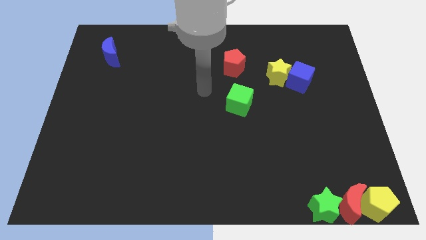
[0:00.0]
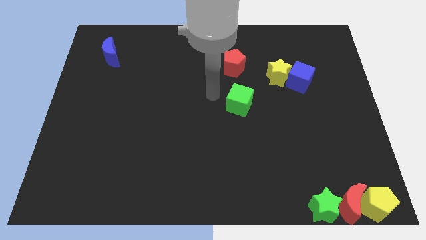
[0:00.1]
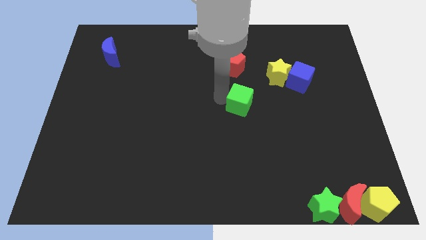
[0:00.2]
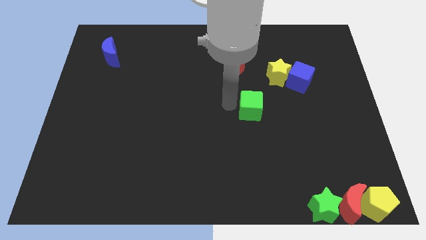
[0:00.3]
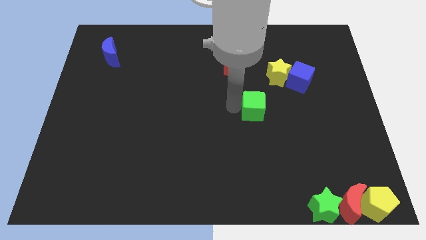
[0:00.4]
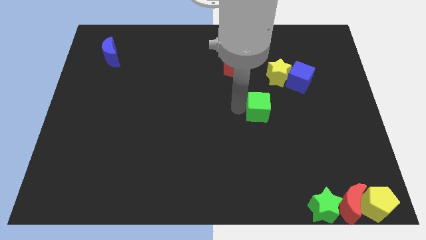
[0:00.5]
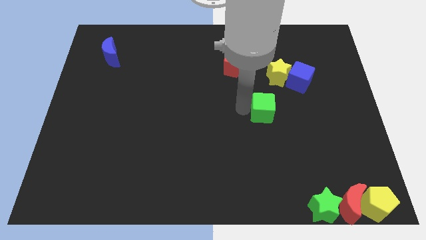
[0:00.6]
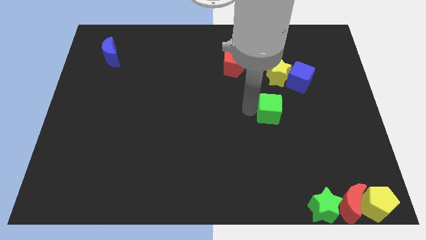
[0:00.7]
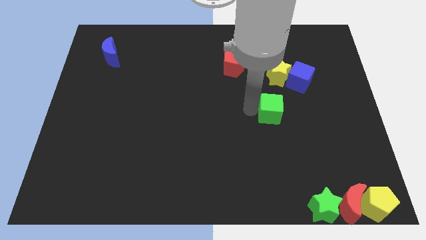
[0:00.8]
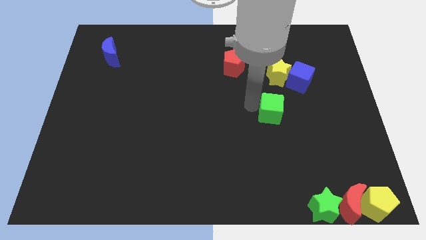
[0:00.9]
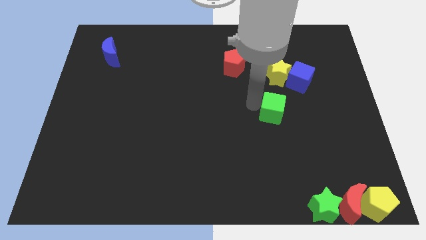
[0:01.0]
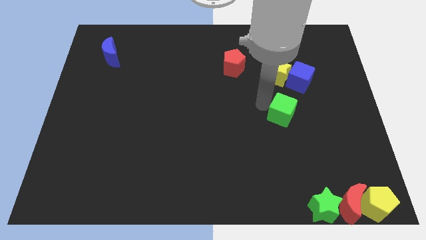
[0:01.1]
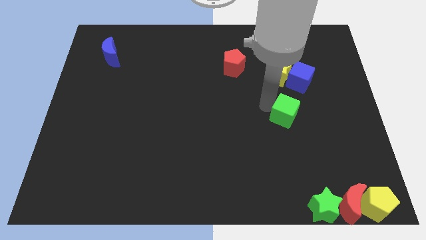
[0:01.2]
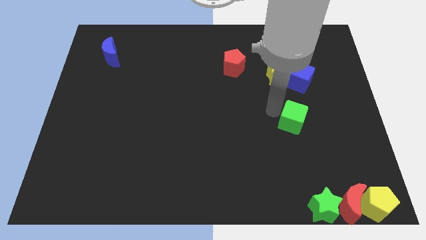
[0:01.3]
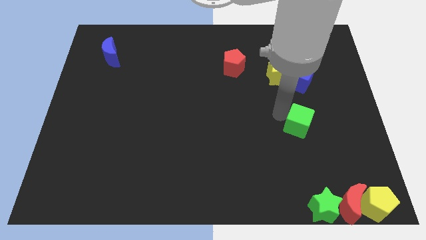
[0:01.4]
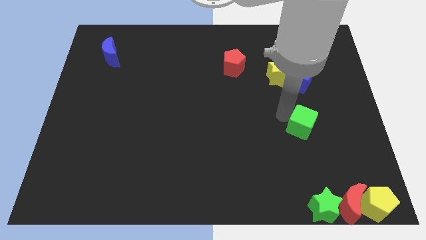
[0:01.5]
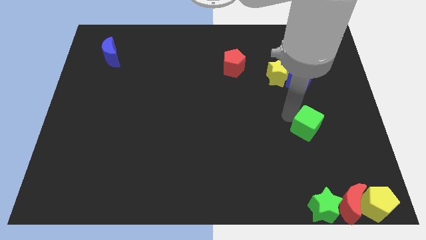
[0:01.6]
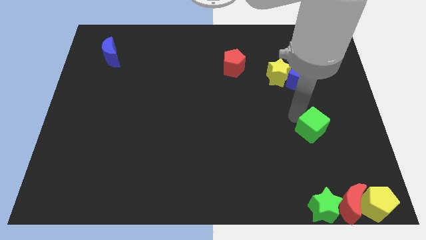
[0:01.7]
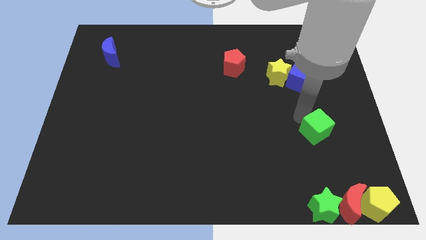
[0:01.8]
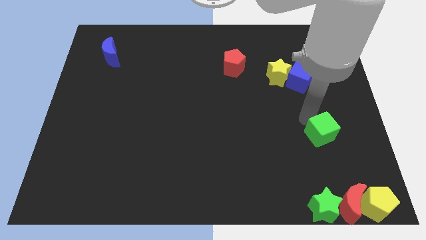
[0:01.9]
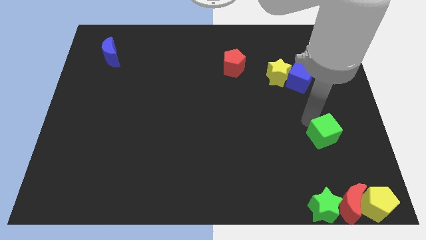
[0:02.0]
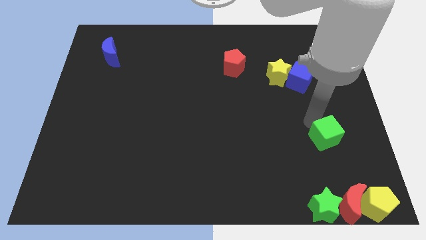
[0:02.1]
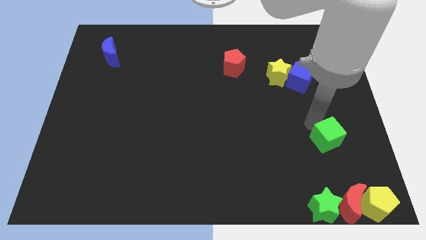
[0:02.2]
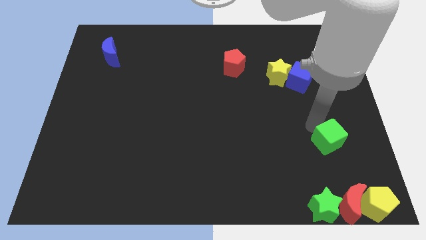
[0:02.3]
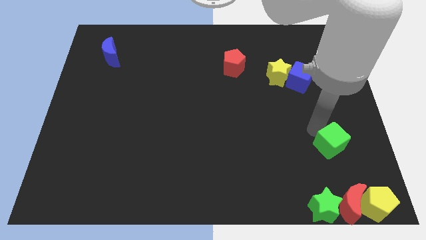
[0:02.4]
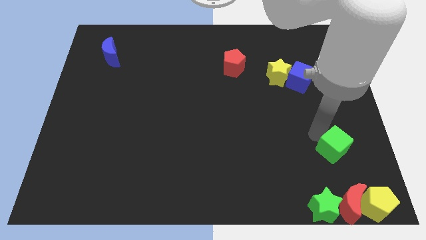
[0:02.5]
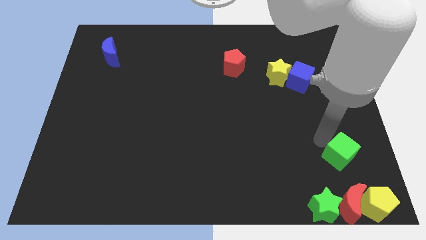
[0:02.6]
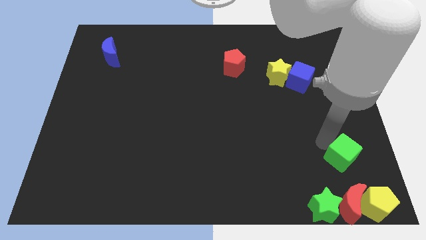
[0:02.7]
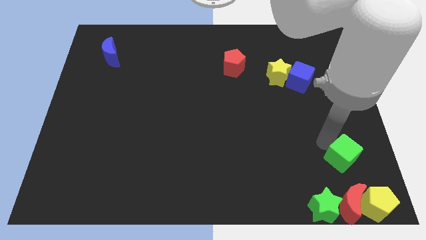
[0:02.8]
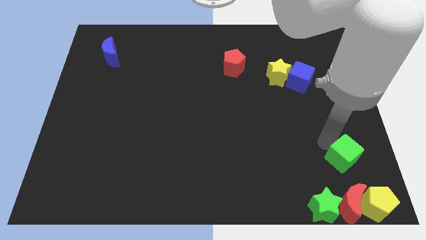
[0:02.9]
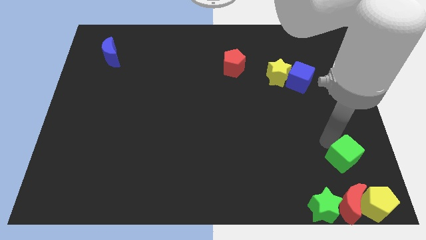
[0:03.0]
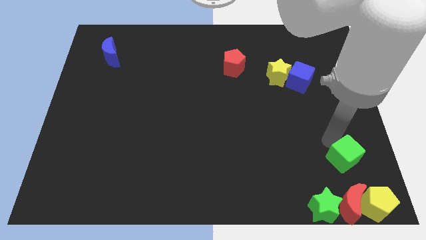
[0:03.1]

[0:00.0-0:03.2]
move the green cube towards the horizontal line of blocks

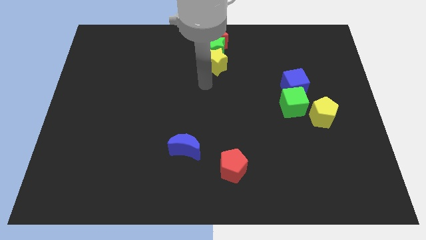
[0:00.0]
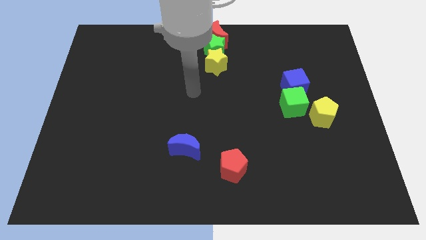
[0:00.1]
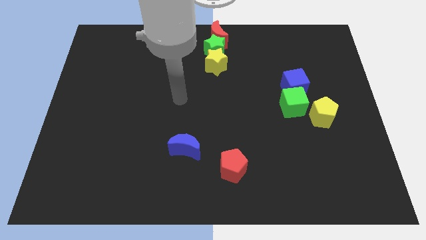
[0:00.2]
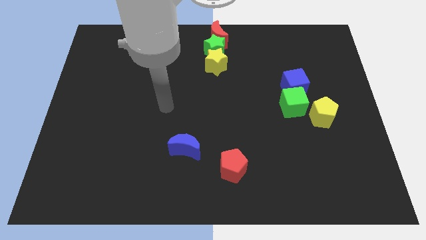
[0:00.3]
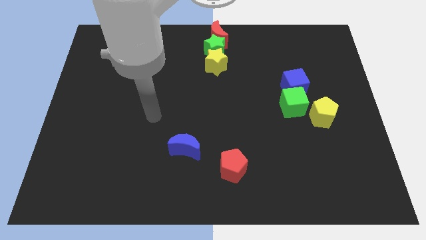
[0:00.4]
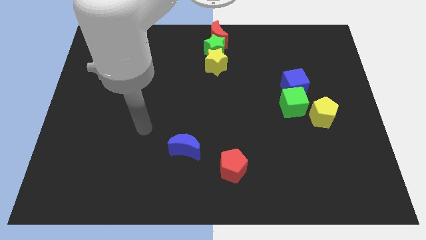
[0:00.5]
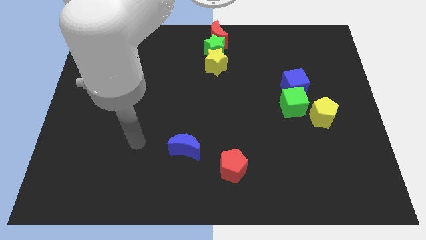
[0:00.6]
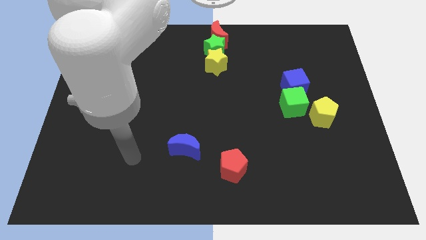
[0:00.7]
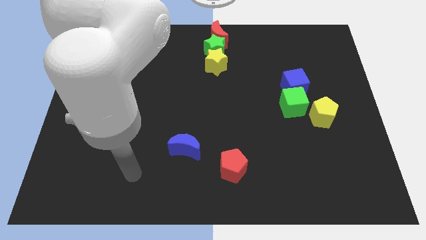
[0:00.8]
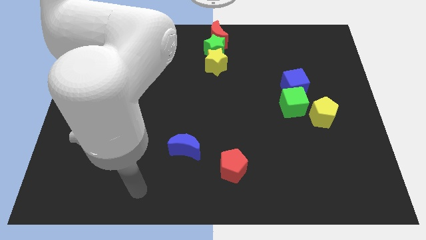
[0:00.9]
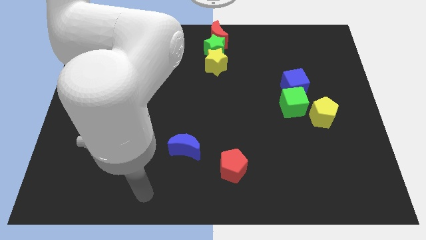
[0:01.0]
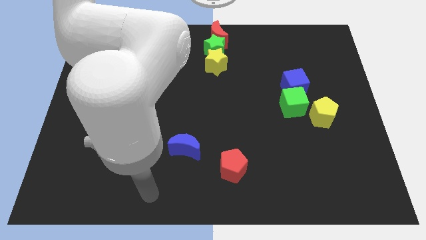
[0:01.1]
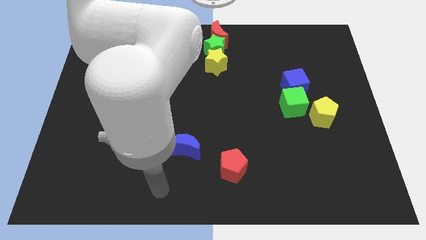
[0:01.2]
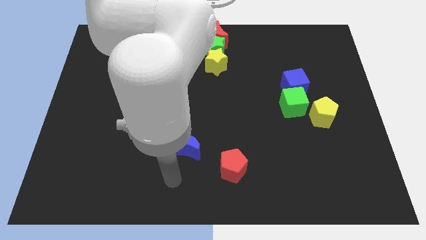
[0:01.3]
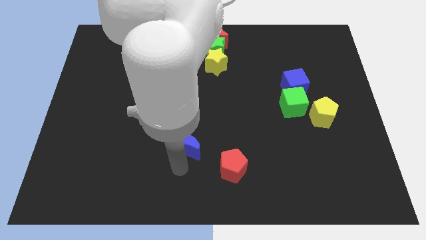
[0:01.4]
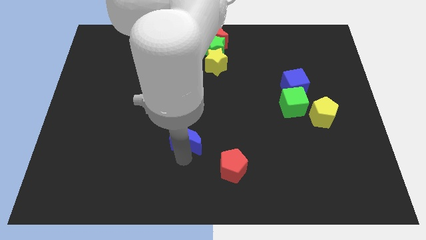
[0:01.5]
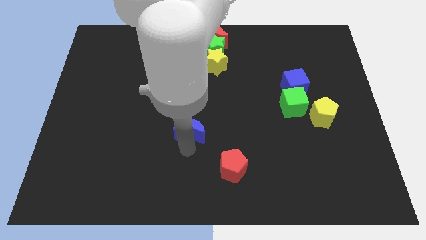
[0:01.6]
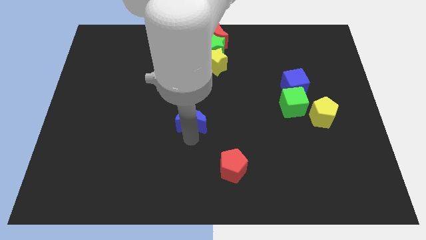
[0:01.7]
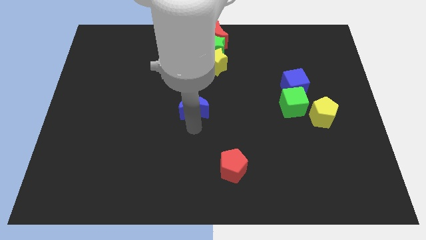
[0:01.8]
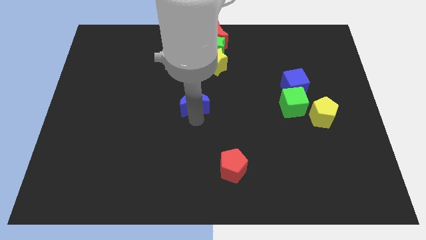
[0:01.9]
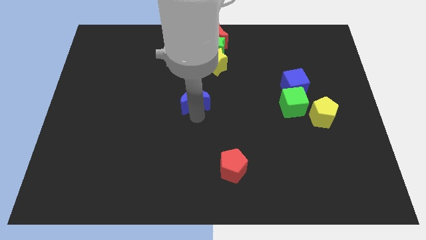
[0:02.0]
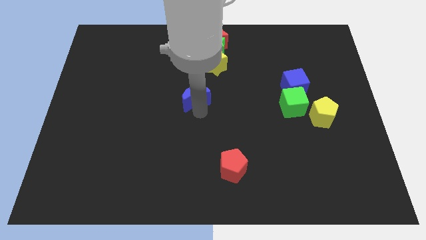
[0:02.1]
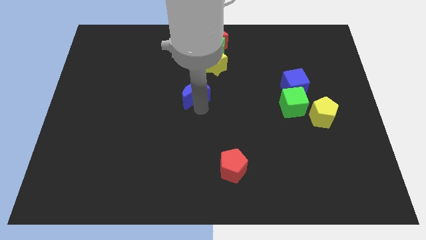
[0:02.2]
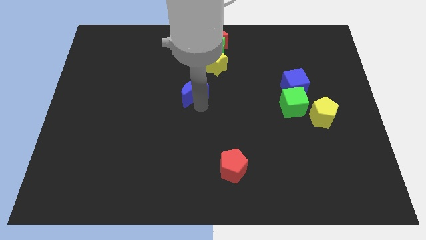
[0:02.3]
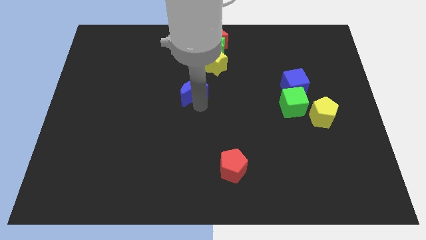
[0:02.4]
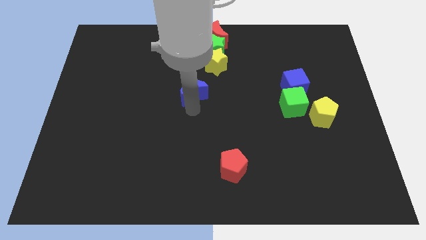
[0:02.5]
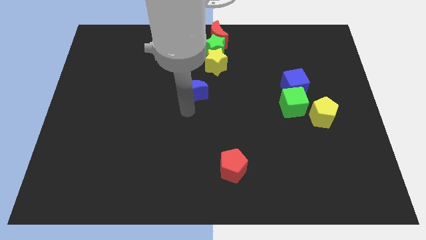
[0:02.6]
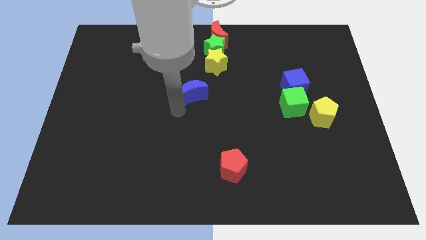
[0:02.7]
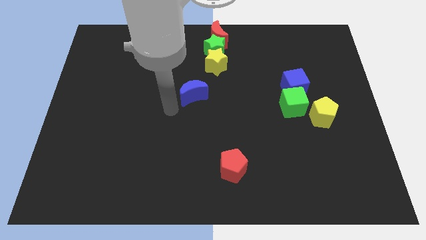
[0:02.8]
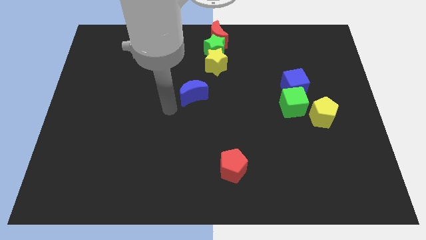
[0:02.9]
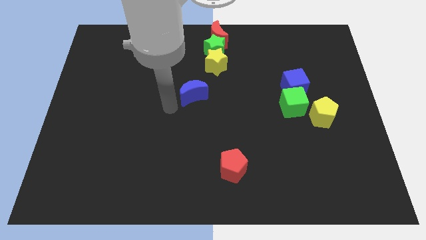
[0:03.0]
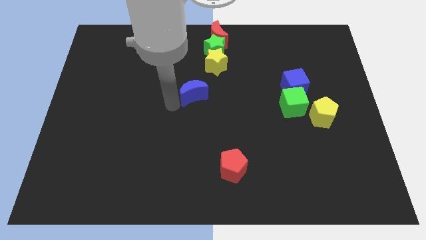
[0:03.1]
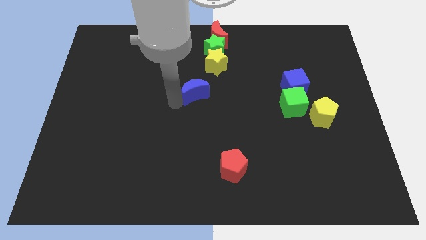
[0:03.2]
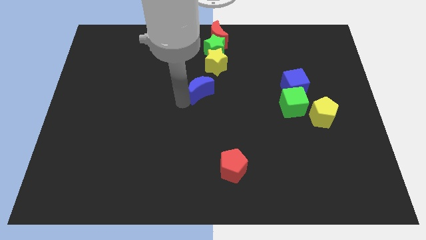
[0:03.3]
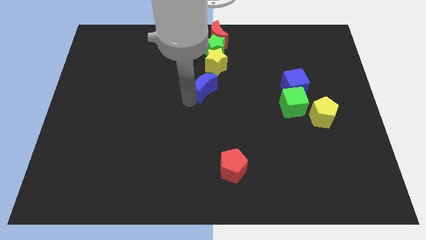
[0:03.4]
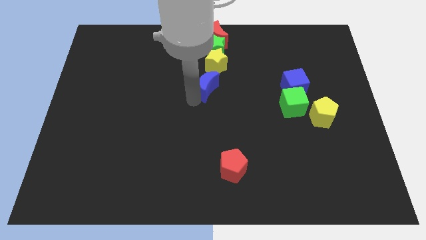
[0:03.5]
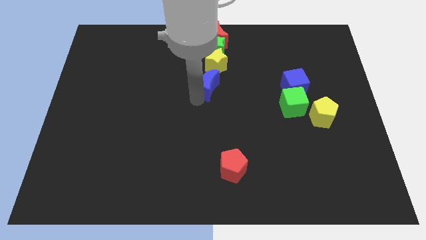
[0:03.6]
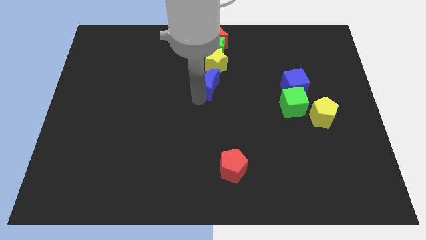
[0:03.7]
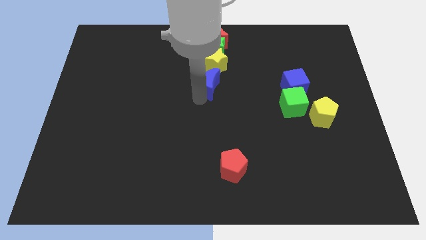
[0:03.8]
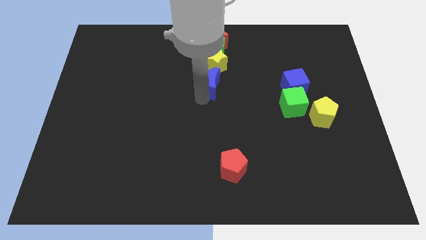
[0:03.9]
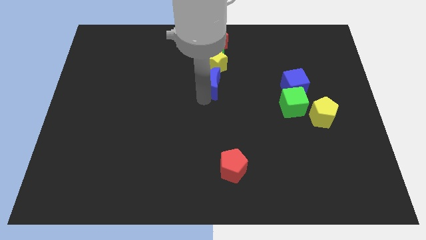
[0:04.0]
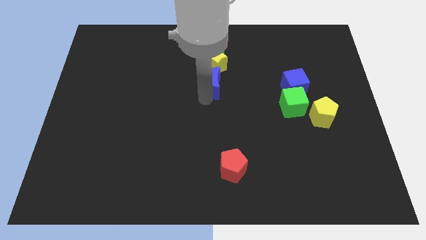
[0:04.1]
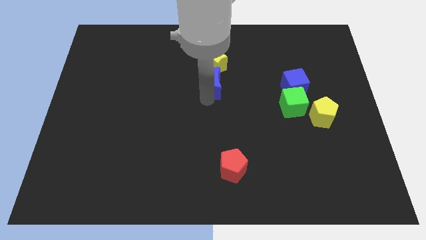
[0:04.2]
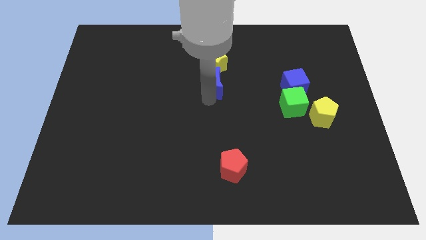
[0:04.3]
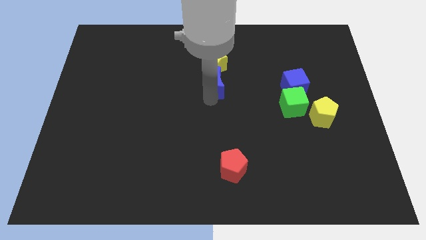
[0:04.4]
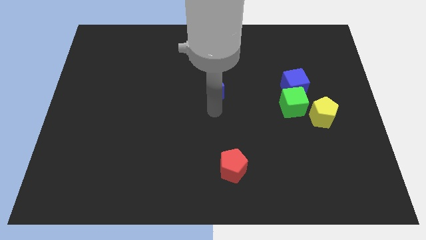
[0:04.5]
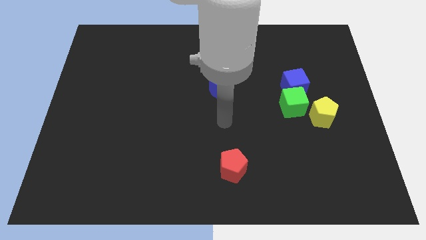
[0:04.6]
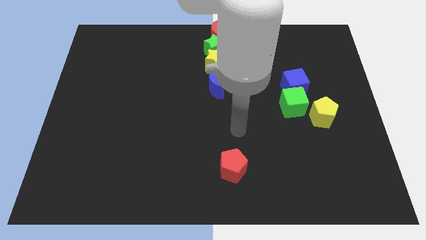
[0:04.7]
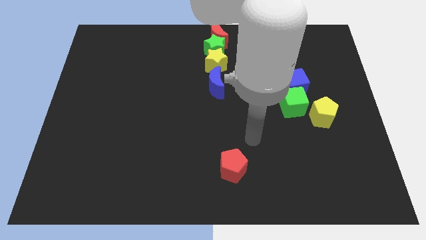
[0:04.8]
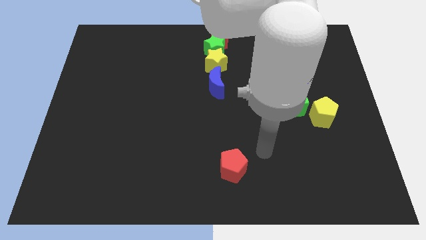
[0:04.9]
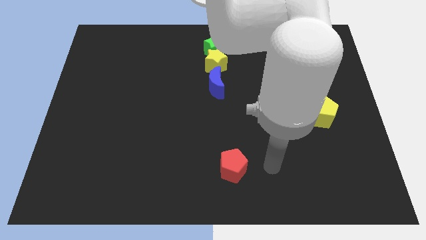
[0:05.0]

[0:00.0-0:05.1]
put the blue moon below the yellow star

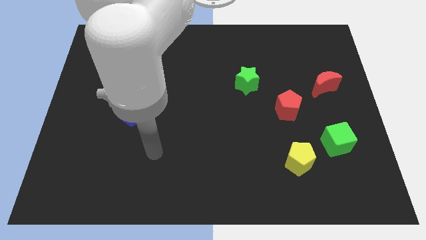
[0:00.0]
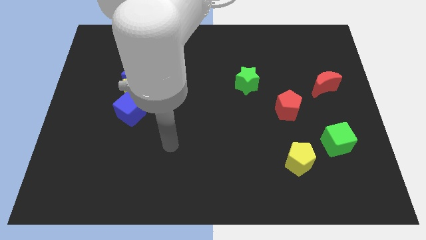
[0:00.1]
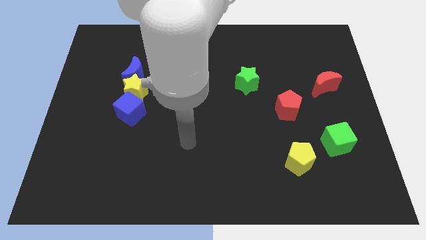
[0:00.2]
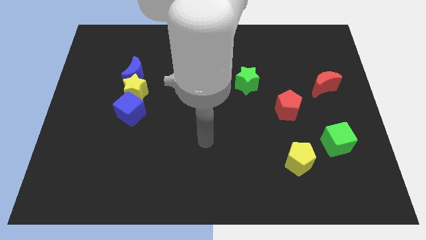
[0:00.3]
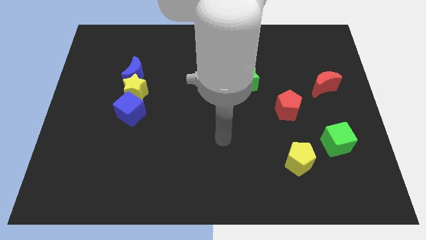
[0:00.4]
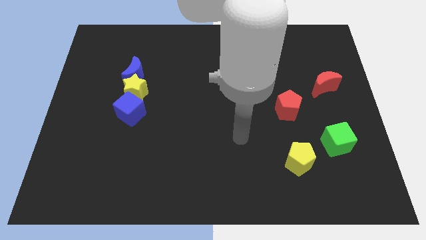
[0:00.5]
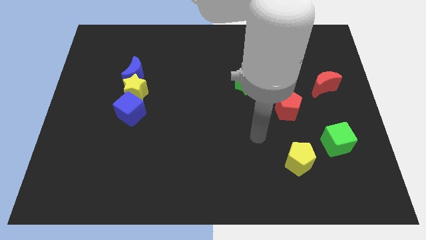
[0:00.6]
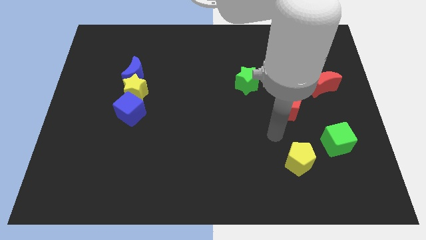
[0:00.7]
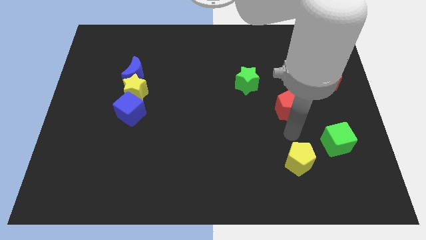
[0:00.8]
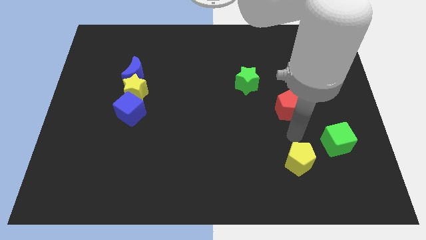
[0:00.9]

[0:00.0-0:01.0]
place arm in between red pentagon and yellow pentagon
